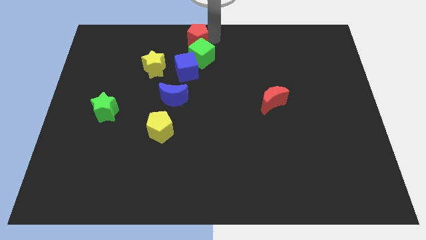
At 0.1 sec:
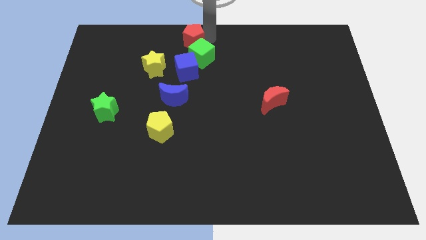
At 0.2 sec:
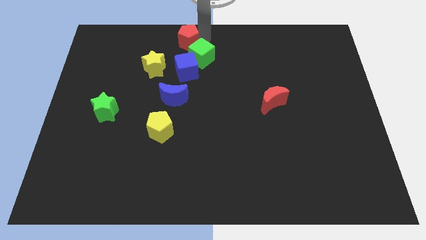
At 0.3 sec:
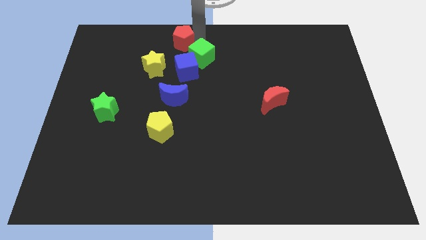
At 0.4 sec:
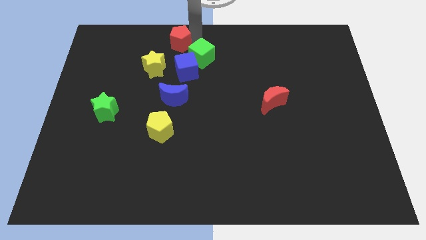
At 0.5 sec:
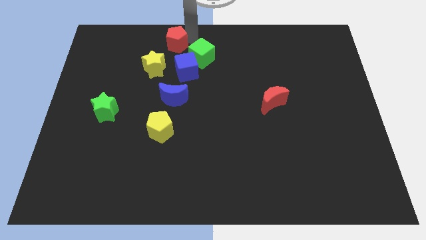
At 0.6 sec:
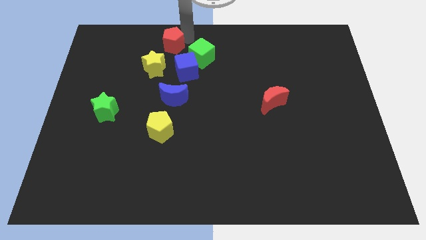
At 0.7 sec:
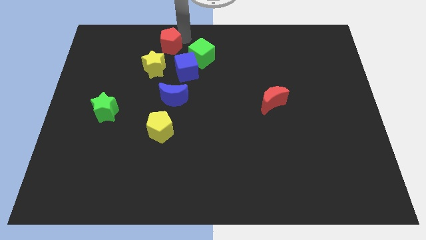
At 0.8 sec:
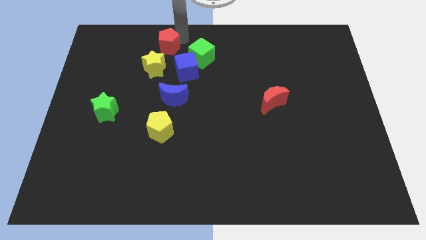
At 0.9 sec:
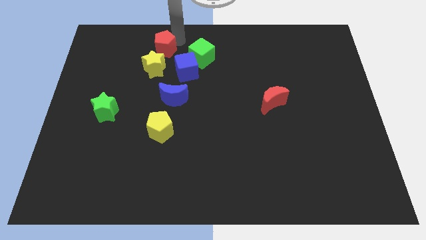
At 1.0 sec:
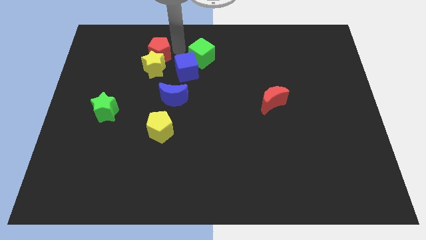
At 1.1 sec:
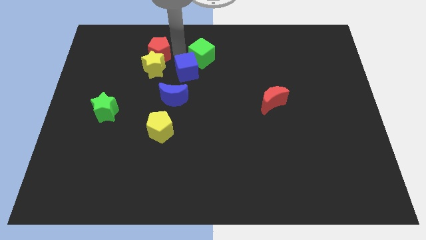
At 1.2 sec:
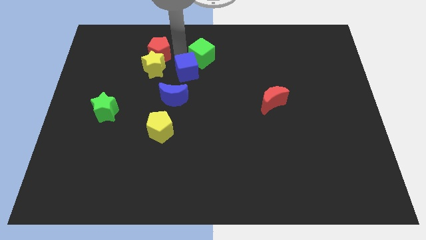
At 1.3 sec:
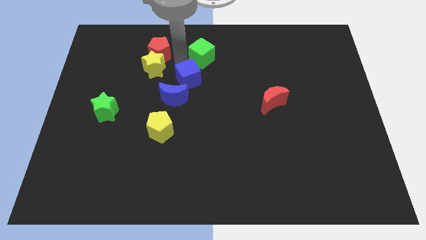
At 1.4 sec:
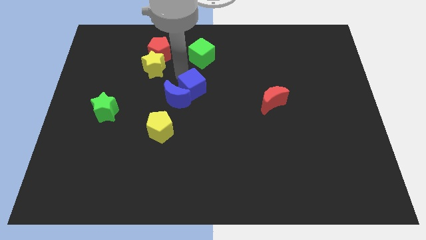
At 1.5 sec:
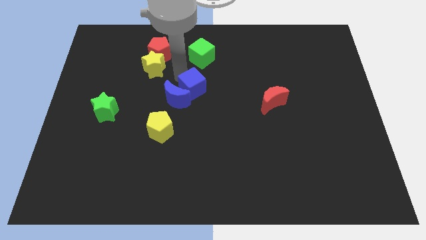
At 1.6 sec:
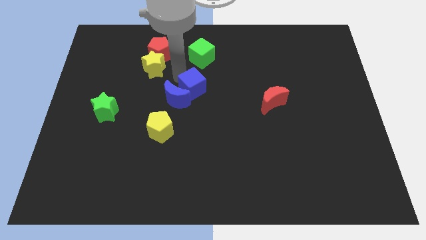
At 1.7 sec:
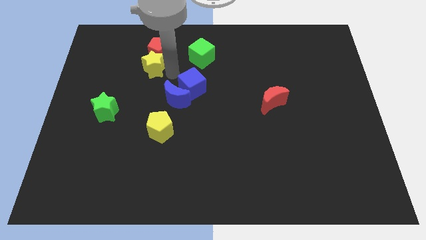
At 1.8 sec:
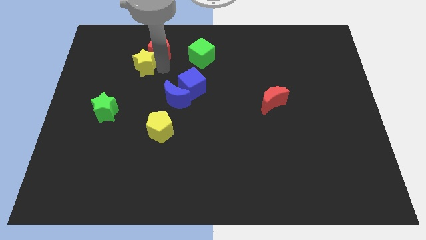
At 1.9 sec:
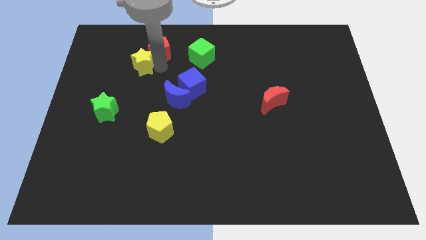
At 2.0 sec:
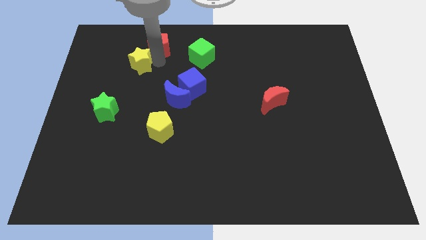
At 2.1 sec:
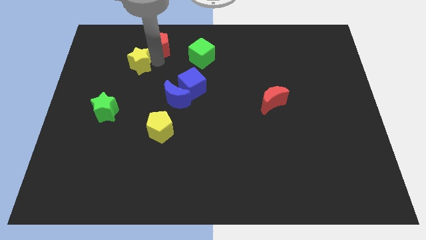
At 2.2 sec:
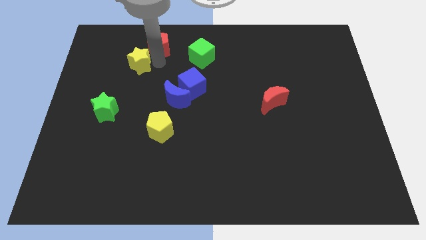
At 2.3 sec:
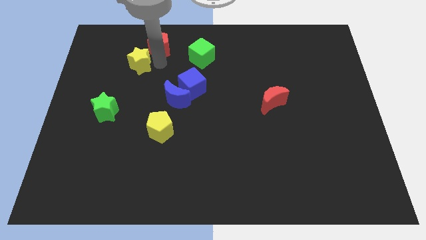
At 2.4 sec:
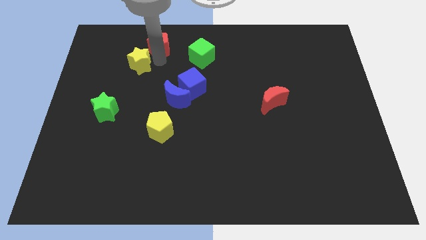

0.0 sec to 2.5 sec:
move the red pentagon above the yellow star

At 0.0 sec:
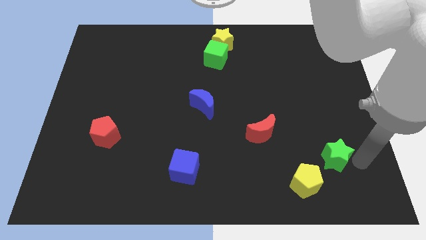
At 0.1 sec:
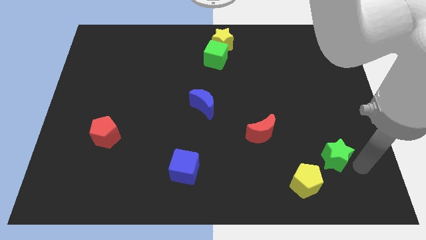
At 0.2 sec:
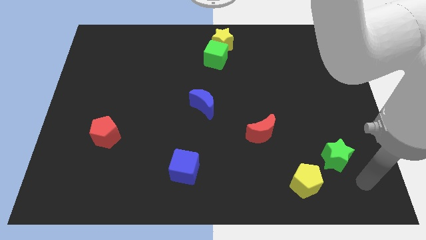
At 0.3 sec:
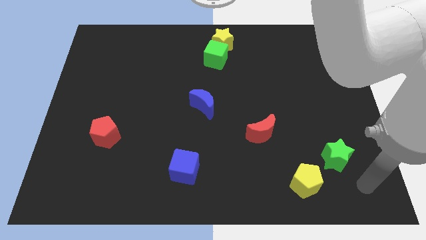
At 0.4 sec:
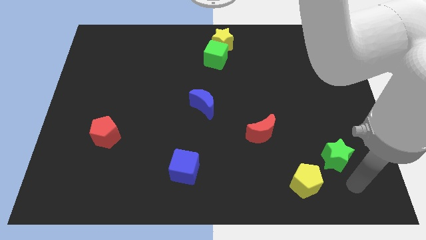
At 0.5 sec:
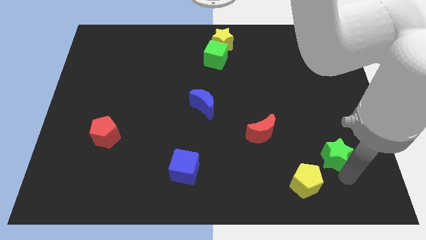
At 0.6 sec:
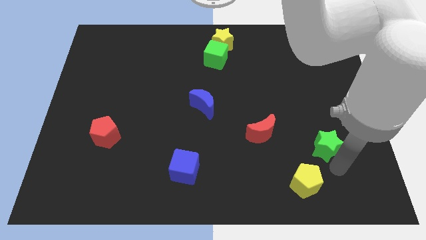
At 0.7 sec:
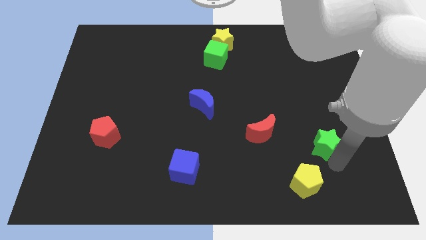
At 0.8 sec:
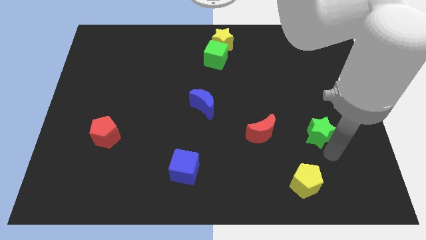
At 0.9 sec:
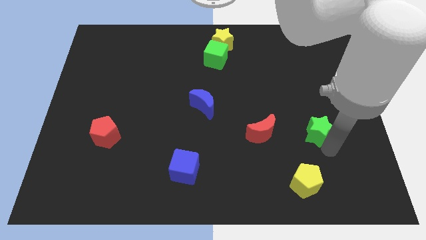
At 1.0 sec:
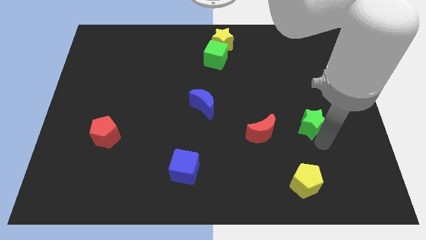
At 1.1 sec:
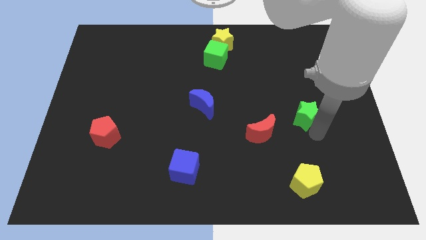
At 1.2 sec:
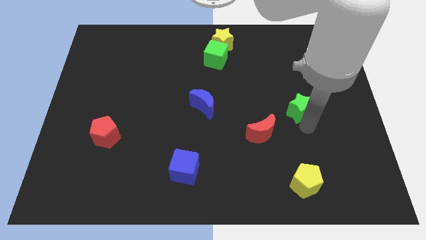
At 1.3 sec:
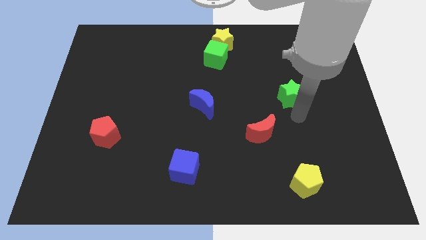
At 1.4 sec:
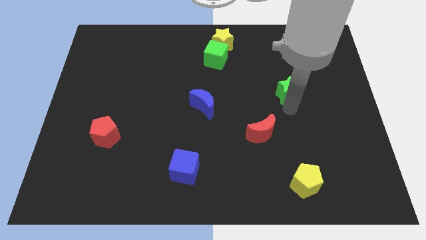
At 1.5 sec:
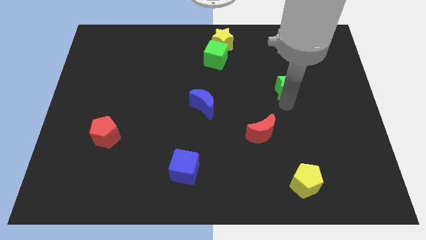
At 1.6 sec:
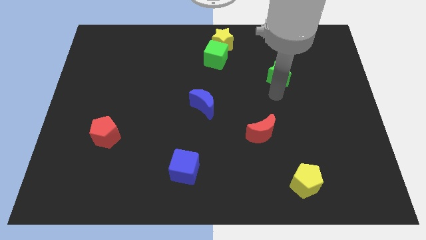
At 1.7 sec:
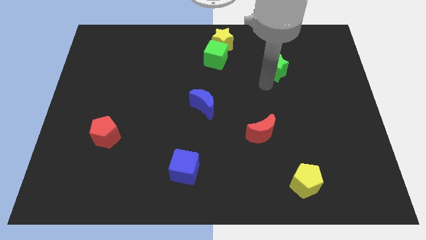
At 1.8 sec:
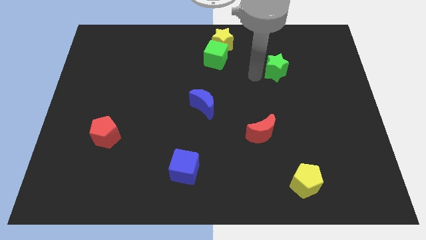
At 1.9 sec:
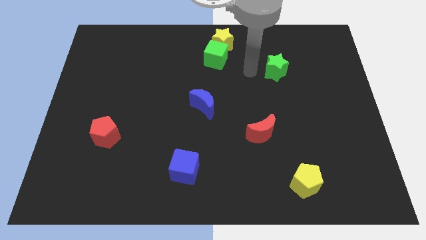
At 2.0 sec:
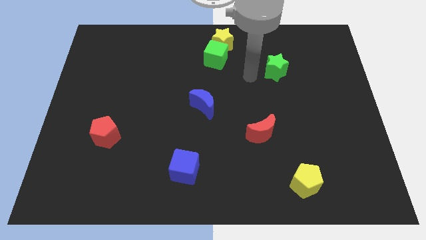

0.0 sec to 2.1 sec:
push the green star towards the green cube

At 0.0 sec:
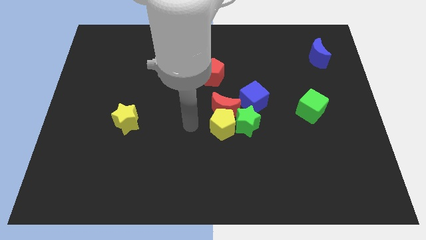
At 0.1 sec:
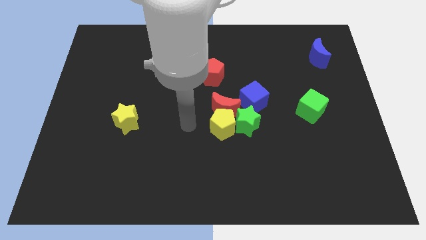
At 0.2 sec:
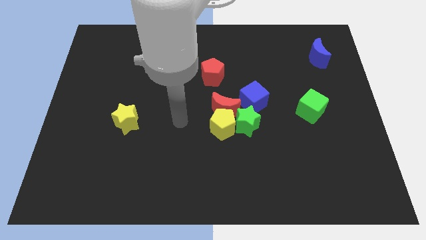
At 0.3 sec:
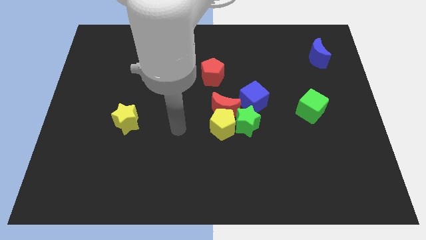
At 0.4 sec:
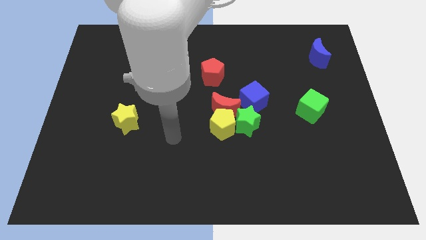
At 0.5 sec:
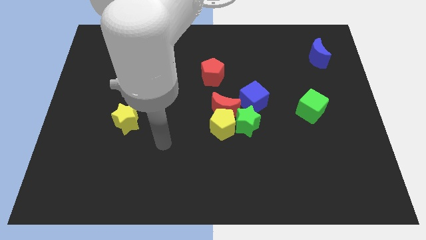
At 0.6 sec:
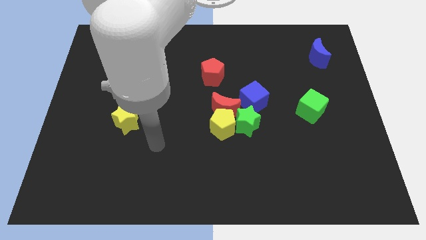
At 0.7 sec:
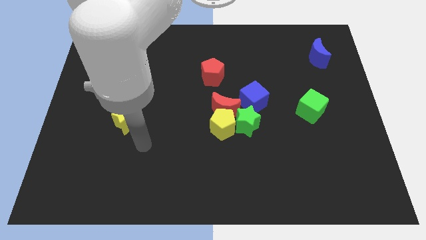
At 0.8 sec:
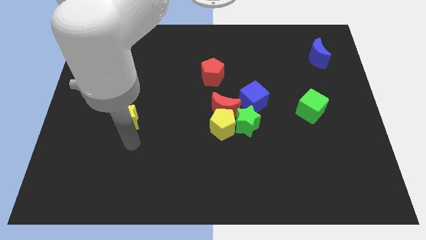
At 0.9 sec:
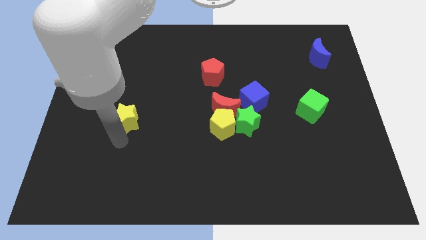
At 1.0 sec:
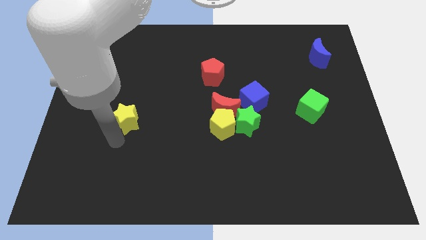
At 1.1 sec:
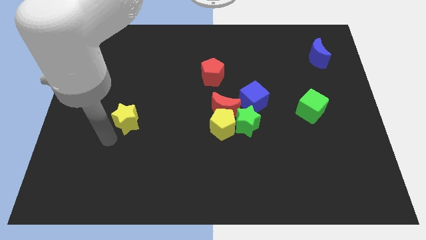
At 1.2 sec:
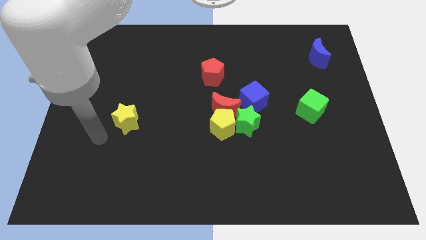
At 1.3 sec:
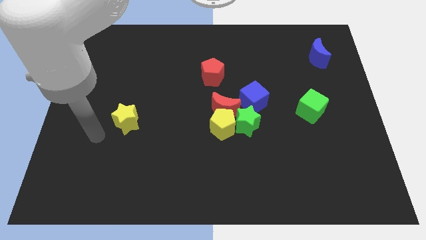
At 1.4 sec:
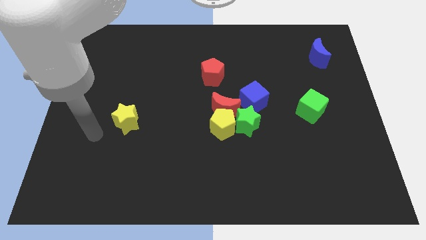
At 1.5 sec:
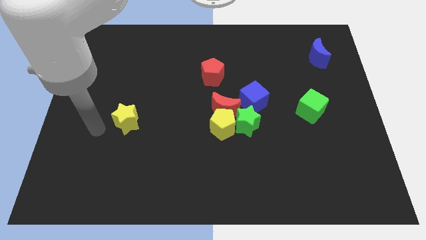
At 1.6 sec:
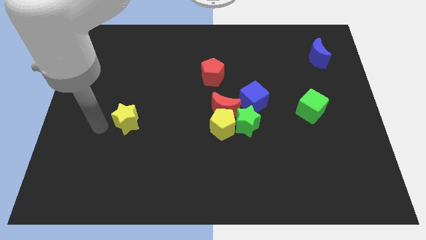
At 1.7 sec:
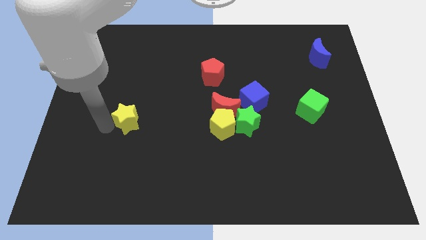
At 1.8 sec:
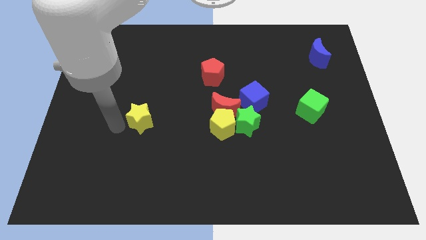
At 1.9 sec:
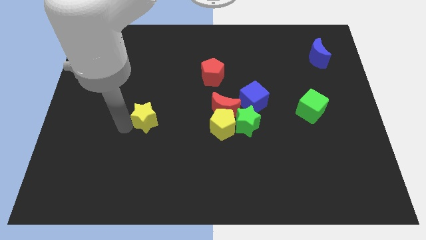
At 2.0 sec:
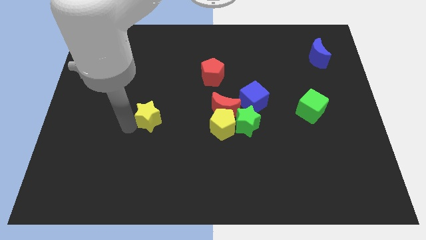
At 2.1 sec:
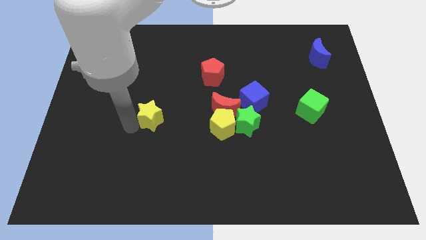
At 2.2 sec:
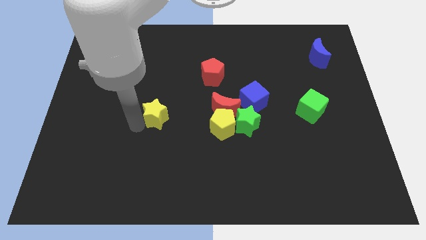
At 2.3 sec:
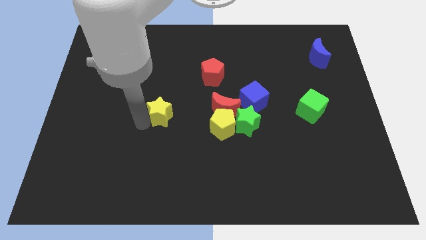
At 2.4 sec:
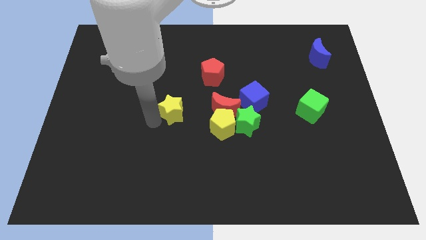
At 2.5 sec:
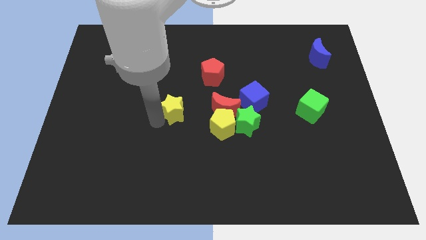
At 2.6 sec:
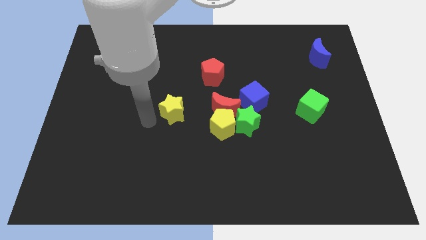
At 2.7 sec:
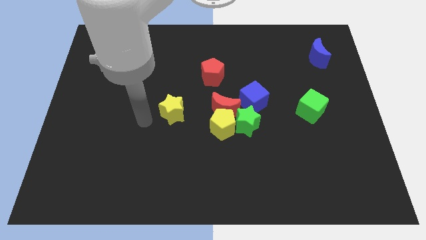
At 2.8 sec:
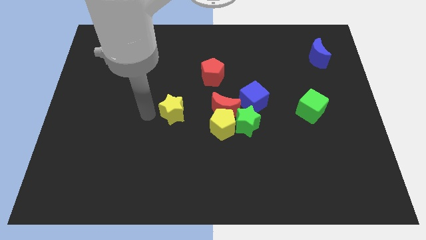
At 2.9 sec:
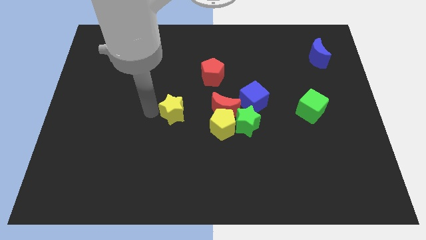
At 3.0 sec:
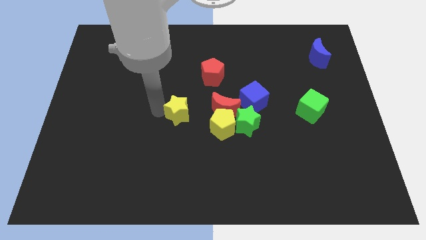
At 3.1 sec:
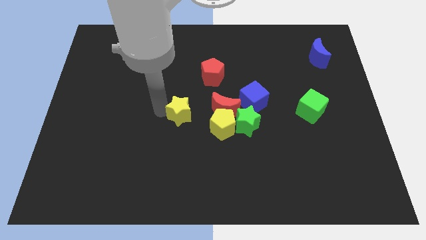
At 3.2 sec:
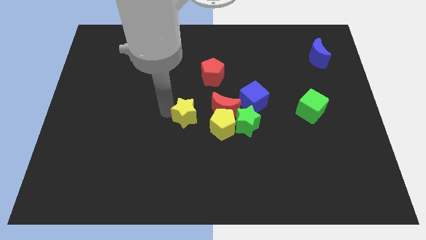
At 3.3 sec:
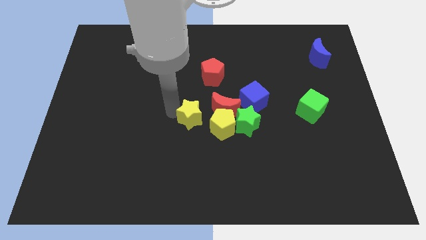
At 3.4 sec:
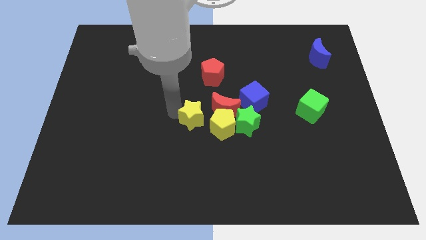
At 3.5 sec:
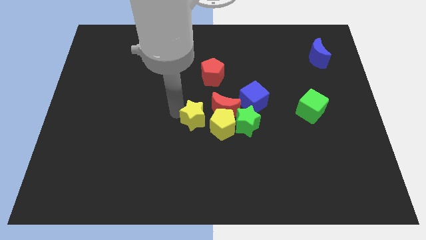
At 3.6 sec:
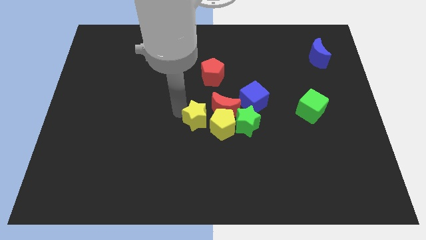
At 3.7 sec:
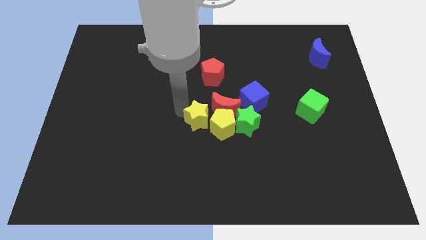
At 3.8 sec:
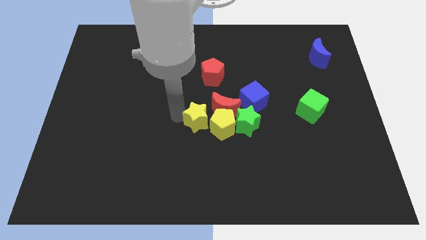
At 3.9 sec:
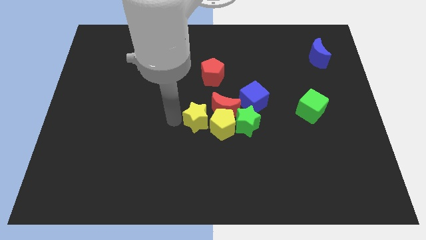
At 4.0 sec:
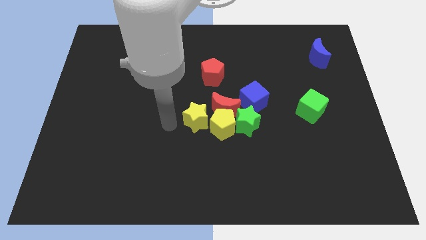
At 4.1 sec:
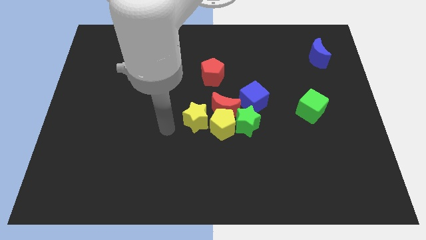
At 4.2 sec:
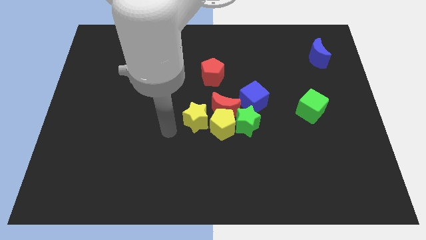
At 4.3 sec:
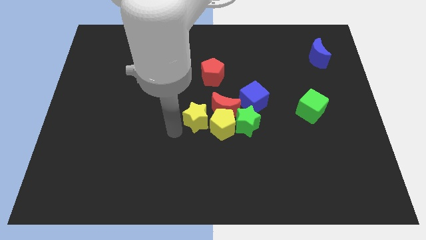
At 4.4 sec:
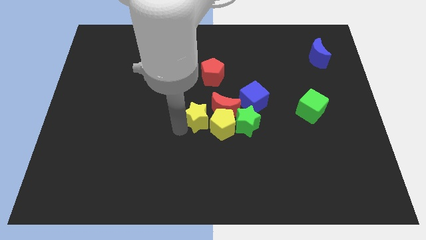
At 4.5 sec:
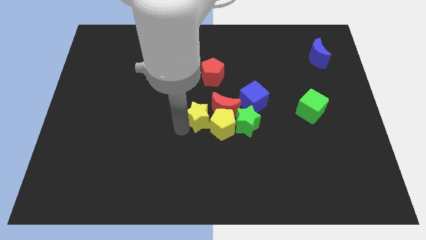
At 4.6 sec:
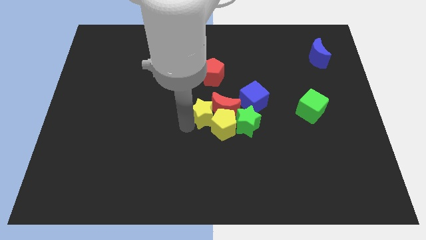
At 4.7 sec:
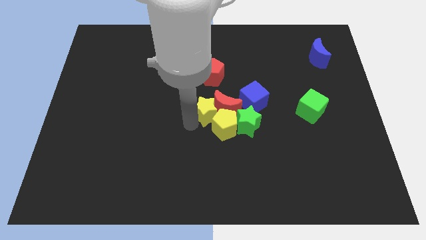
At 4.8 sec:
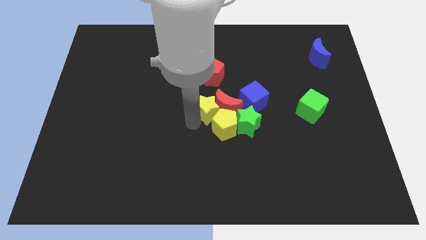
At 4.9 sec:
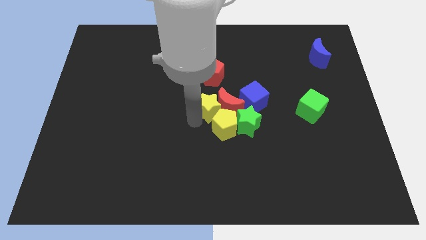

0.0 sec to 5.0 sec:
move the yellow star to the left of the red crescent
